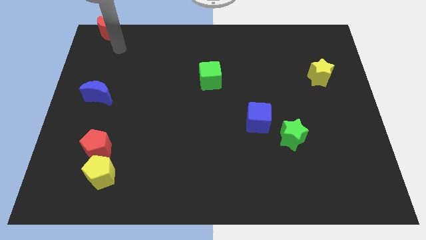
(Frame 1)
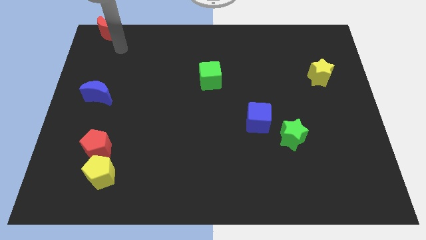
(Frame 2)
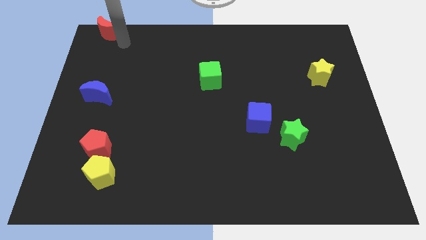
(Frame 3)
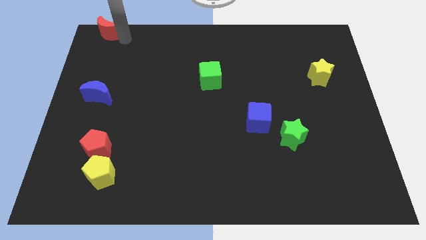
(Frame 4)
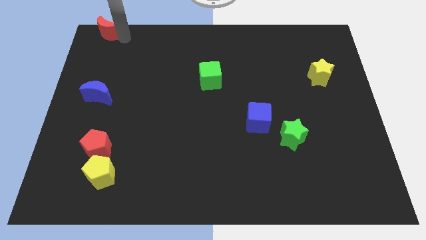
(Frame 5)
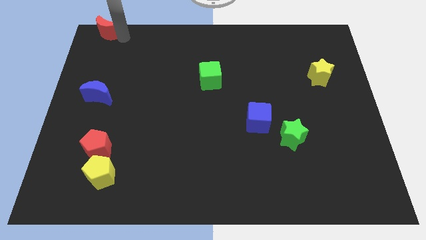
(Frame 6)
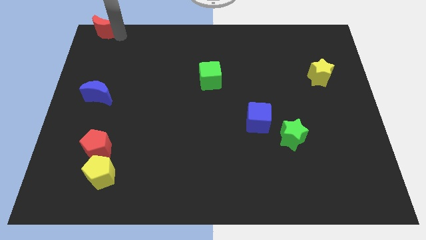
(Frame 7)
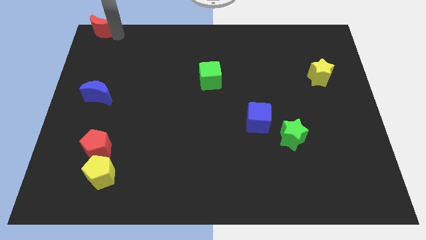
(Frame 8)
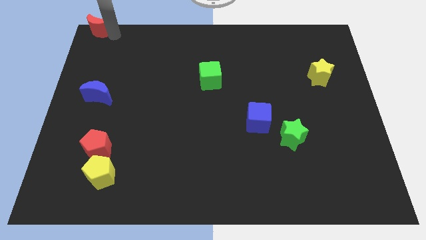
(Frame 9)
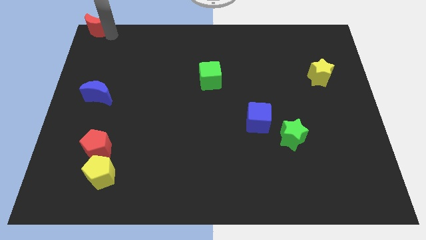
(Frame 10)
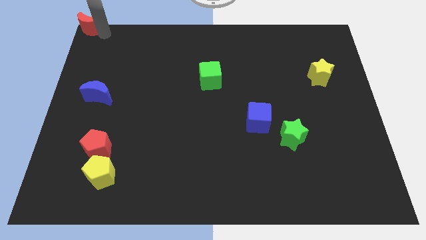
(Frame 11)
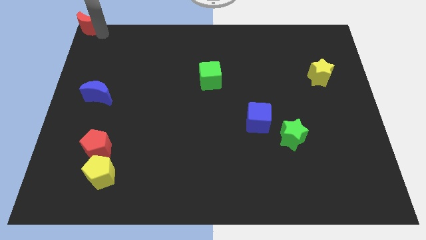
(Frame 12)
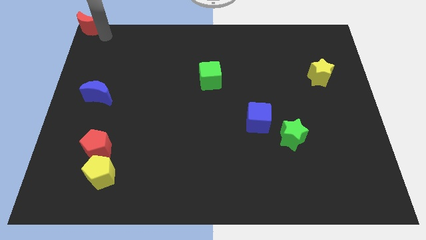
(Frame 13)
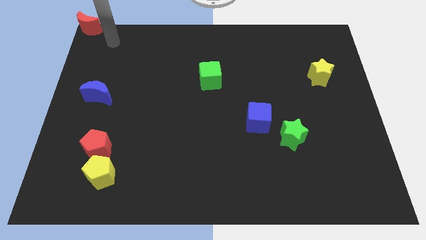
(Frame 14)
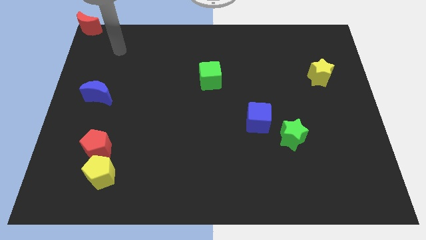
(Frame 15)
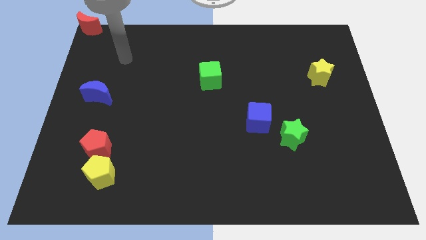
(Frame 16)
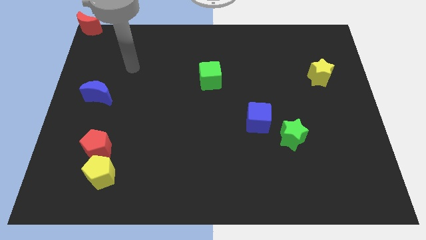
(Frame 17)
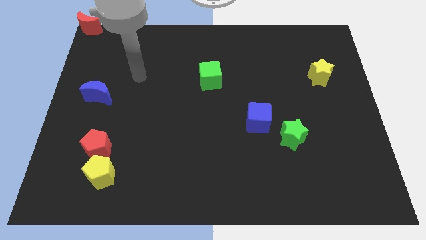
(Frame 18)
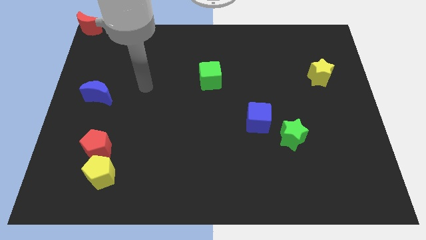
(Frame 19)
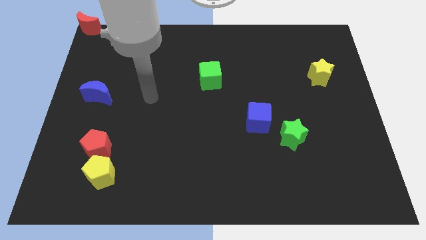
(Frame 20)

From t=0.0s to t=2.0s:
put the red crescent at the top left corner

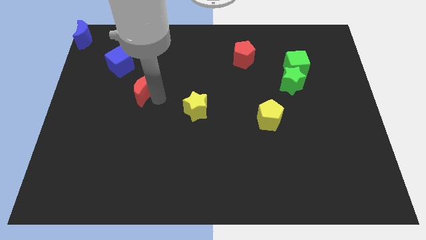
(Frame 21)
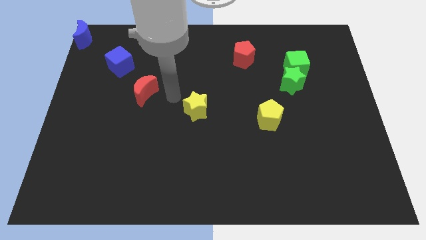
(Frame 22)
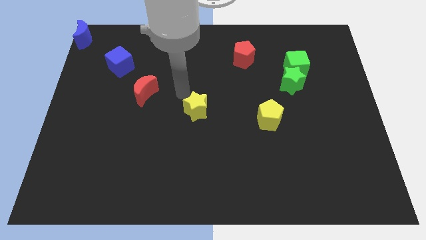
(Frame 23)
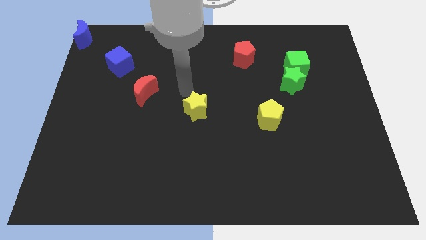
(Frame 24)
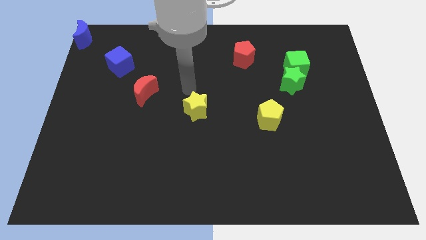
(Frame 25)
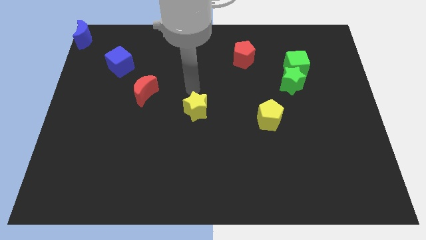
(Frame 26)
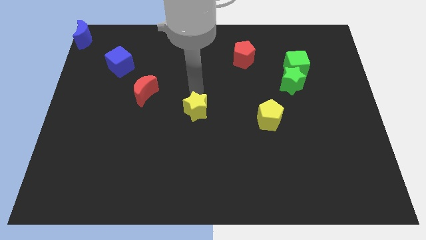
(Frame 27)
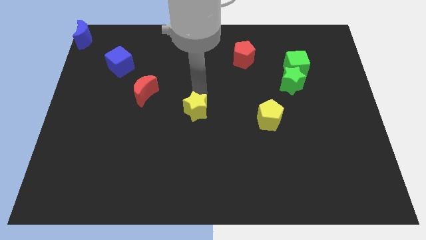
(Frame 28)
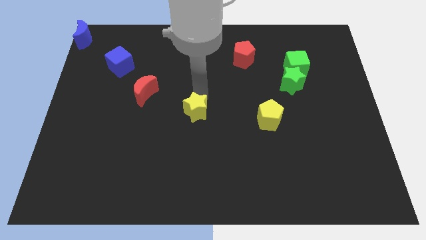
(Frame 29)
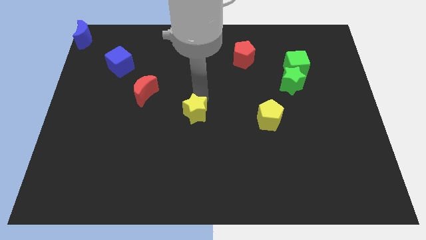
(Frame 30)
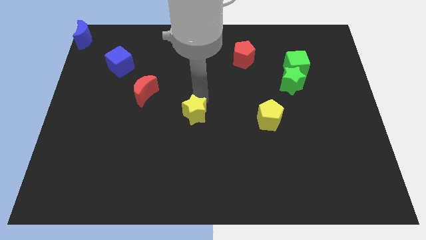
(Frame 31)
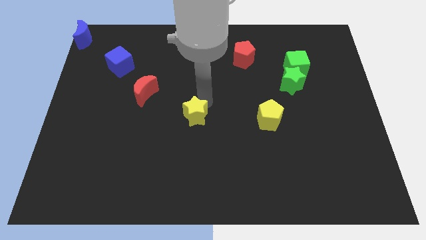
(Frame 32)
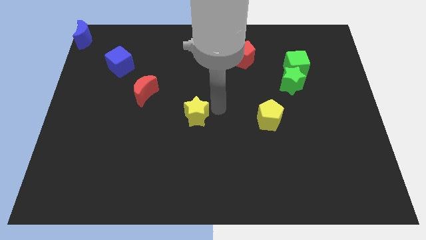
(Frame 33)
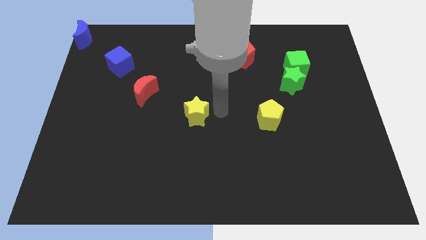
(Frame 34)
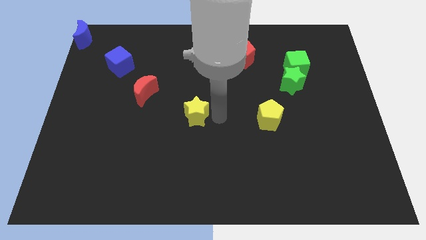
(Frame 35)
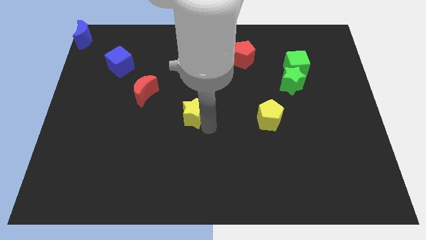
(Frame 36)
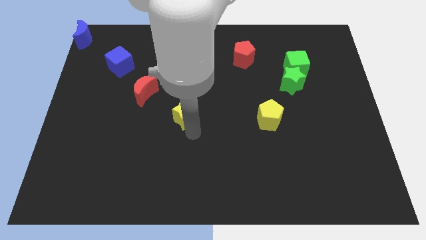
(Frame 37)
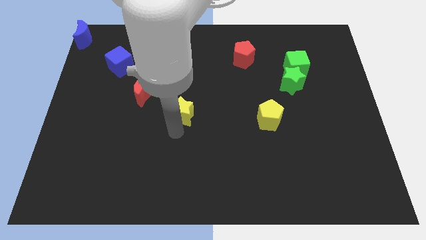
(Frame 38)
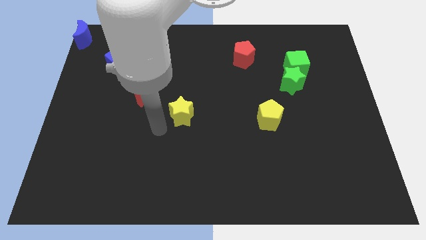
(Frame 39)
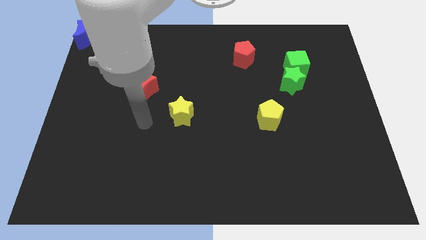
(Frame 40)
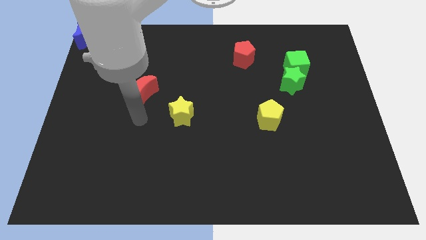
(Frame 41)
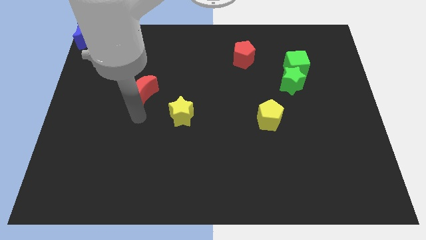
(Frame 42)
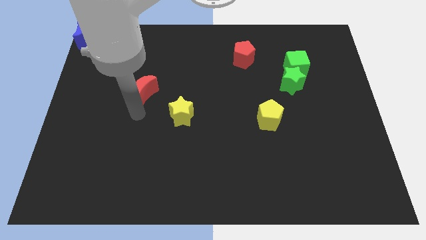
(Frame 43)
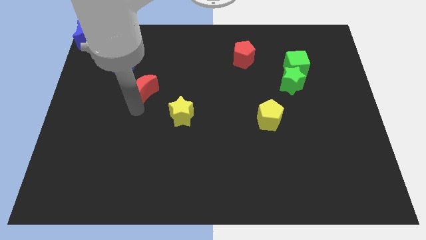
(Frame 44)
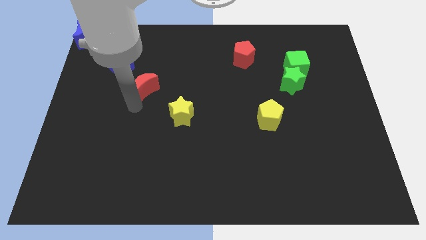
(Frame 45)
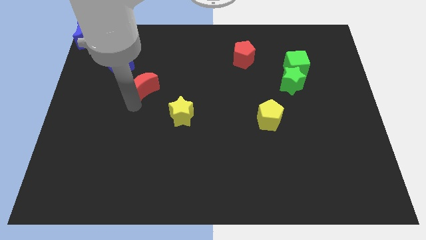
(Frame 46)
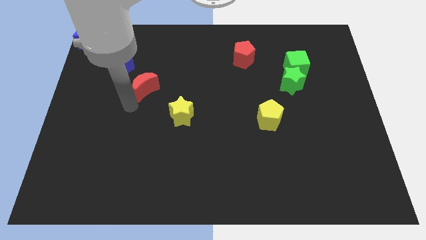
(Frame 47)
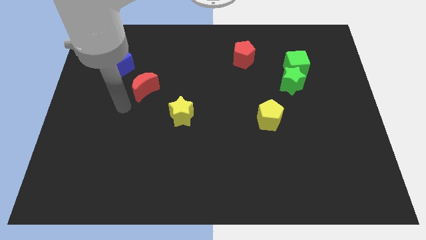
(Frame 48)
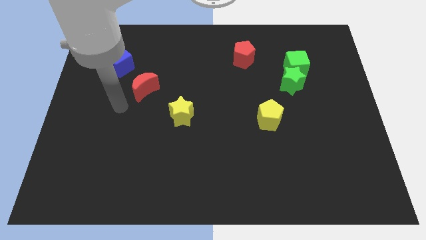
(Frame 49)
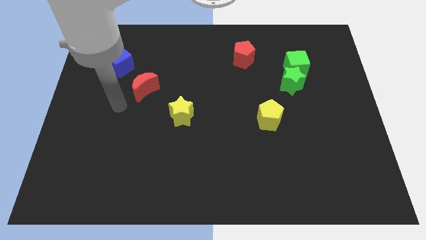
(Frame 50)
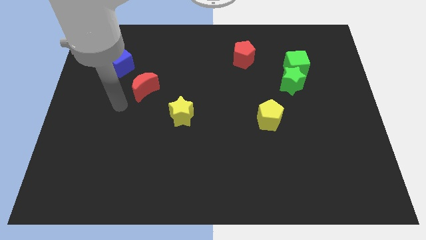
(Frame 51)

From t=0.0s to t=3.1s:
move the yellow star to the left of the yellow pentagon

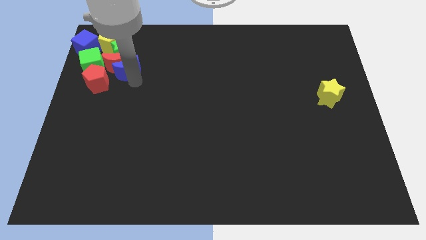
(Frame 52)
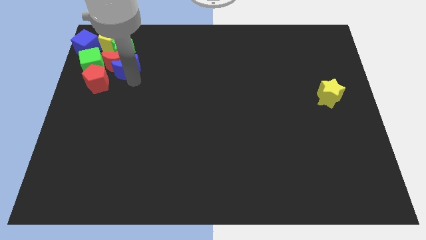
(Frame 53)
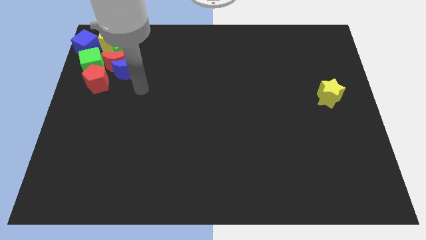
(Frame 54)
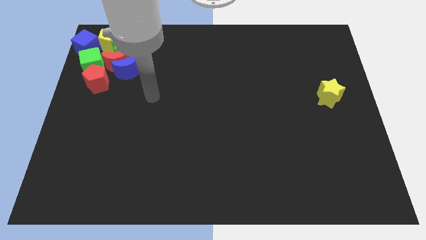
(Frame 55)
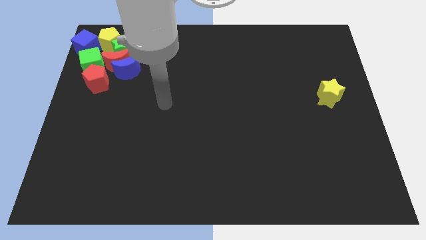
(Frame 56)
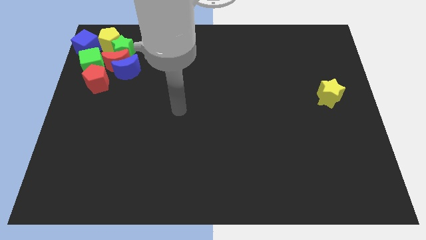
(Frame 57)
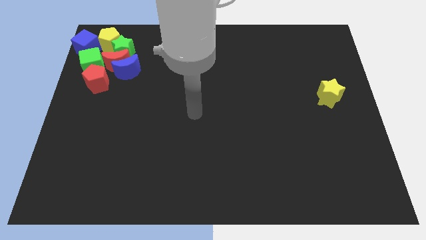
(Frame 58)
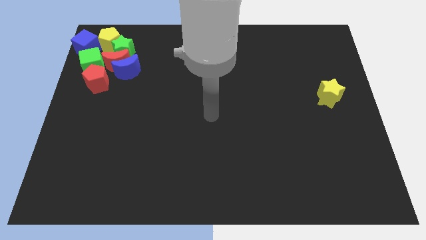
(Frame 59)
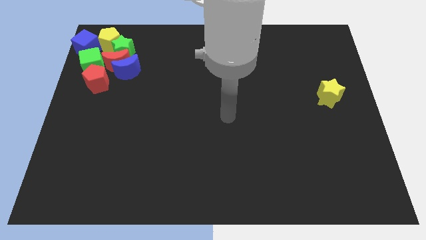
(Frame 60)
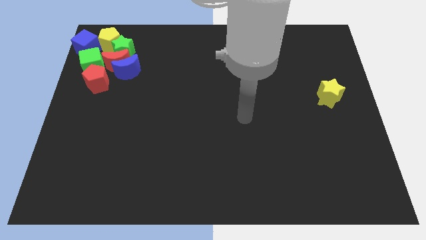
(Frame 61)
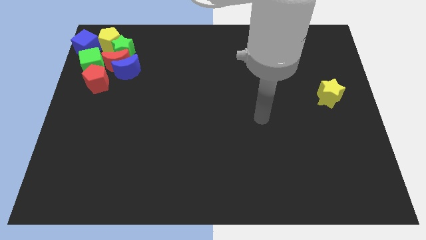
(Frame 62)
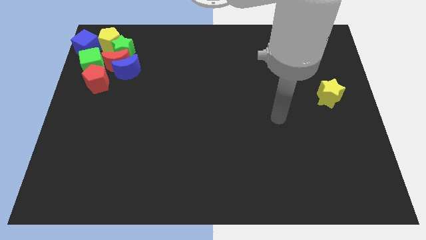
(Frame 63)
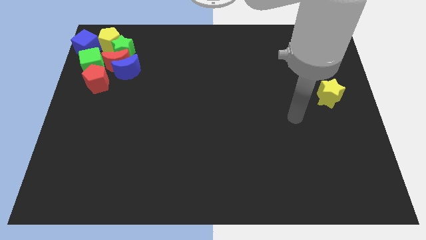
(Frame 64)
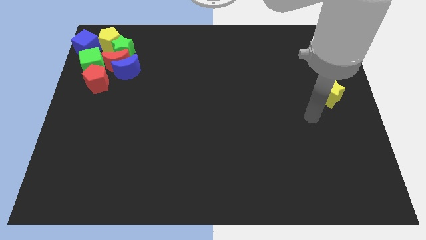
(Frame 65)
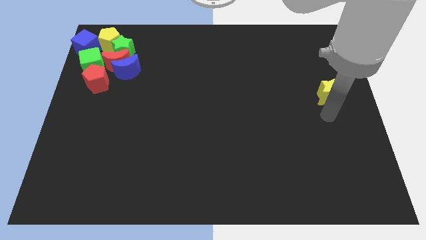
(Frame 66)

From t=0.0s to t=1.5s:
go away from the group of blocks

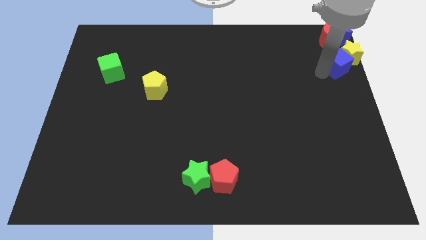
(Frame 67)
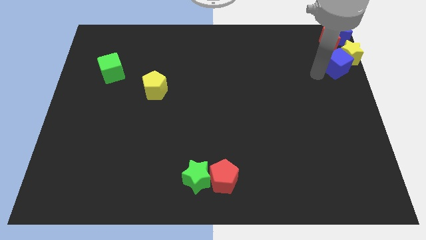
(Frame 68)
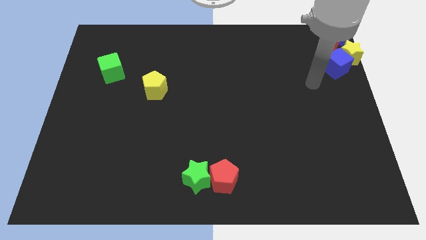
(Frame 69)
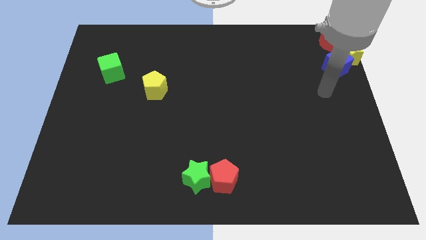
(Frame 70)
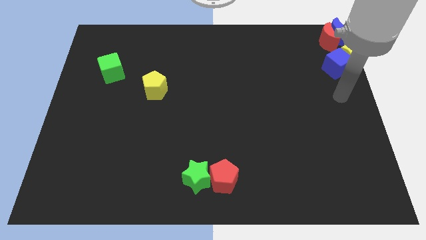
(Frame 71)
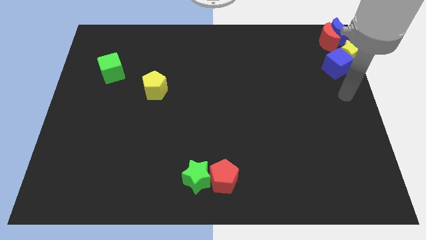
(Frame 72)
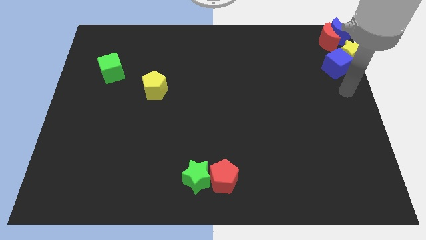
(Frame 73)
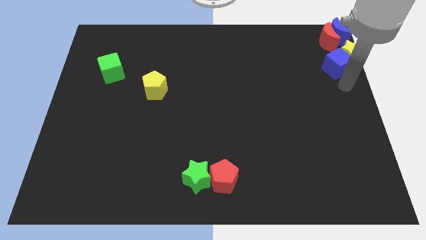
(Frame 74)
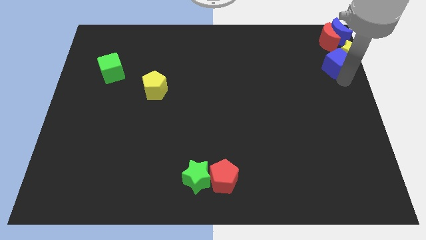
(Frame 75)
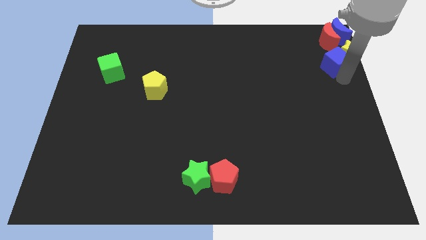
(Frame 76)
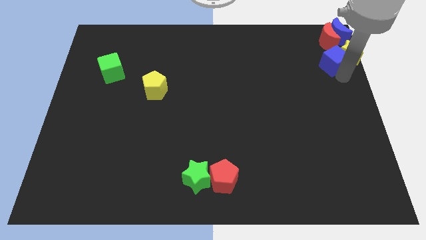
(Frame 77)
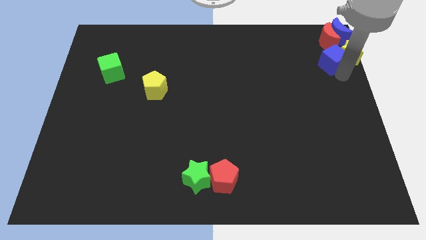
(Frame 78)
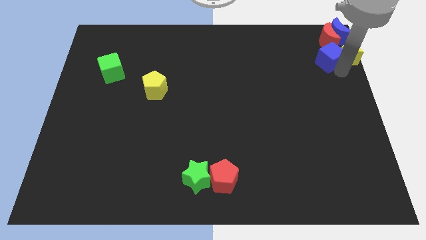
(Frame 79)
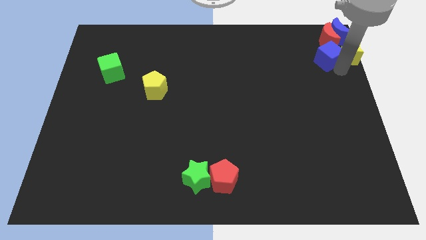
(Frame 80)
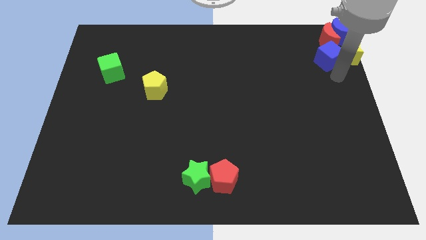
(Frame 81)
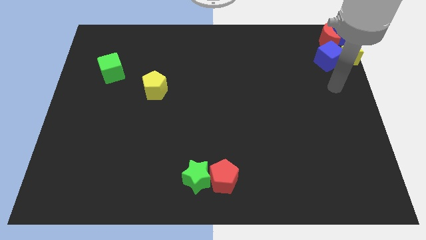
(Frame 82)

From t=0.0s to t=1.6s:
move the blue cube close to the red moon

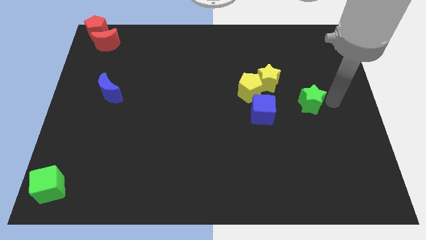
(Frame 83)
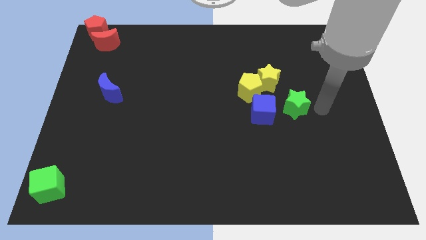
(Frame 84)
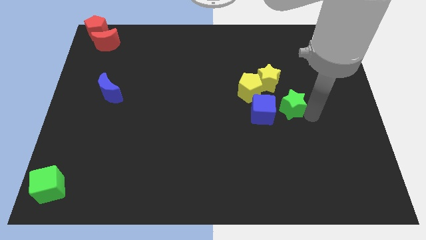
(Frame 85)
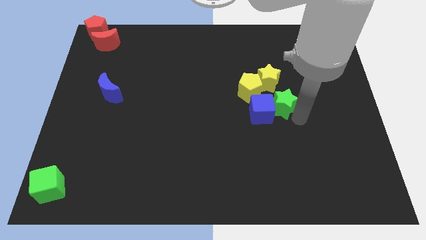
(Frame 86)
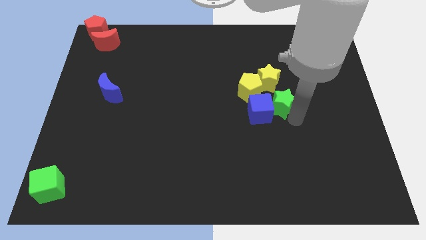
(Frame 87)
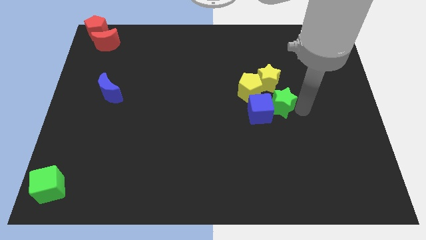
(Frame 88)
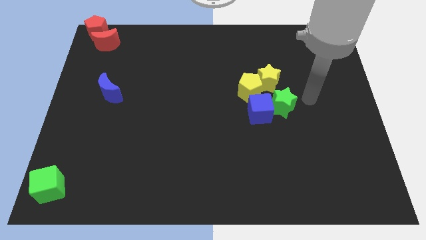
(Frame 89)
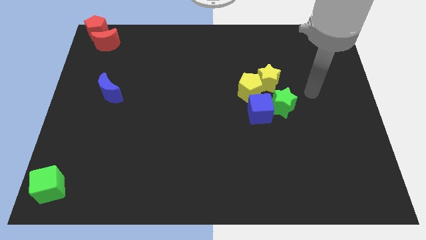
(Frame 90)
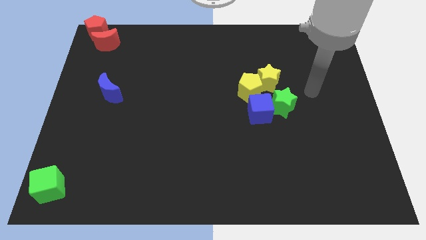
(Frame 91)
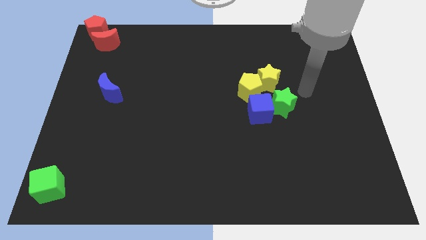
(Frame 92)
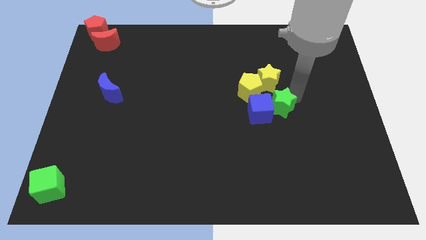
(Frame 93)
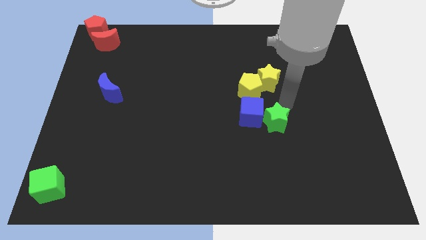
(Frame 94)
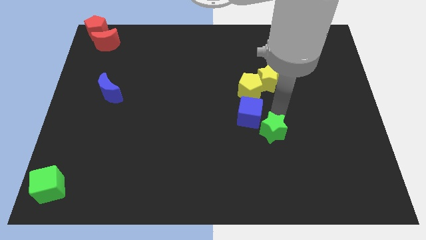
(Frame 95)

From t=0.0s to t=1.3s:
move the green star below the yellow star
